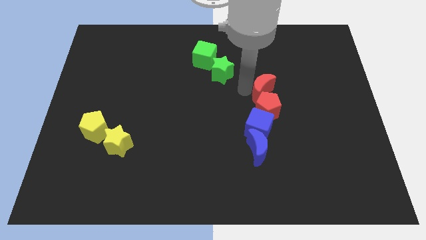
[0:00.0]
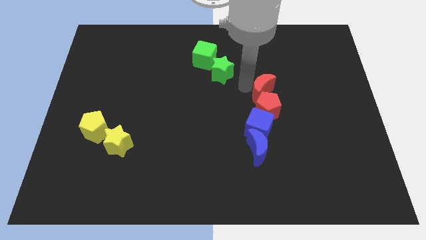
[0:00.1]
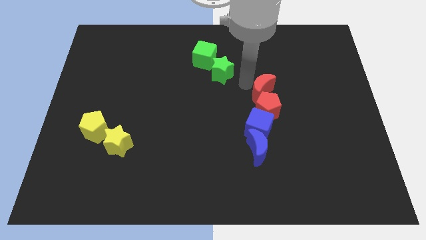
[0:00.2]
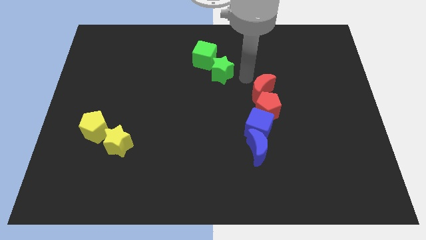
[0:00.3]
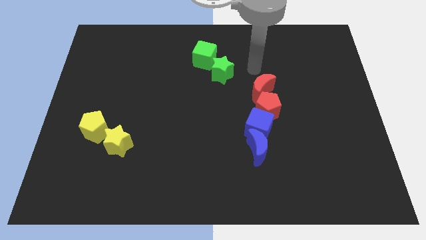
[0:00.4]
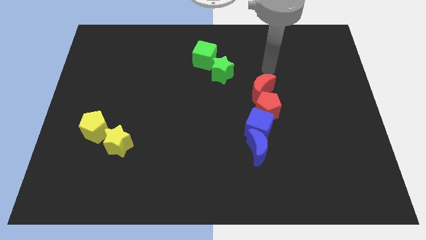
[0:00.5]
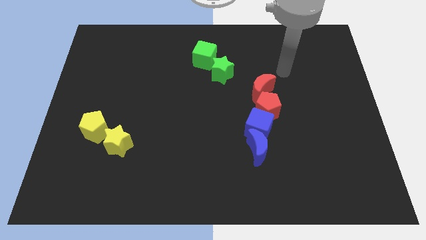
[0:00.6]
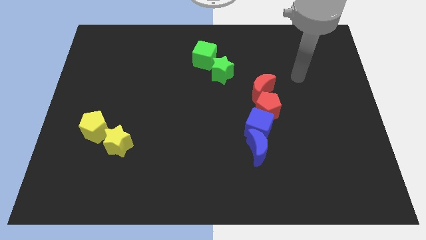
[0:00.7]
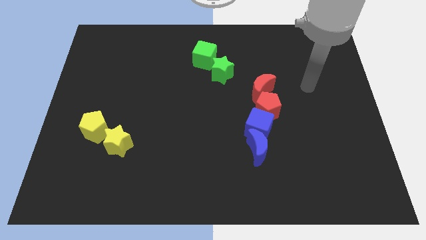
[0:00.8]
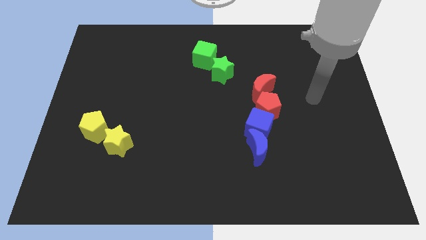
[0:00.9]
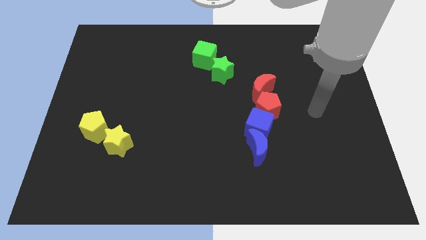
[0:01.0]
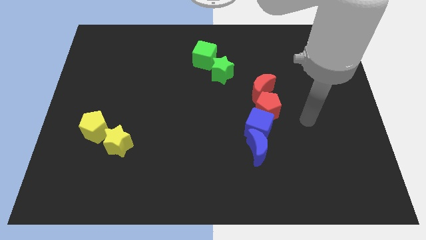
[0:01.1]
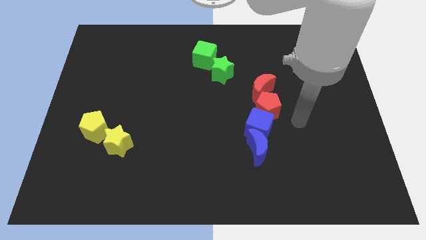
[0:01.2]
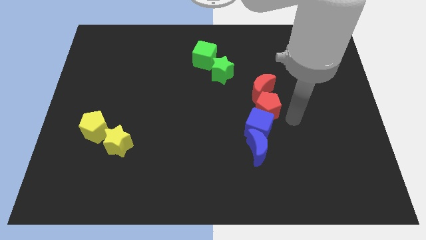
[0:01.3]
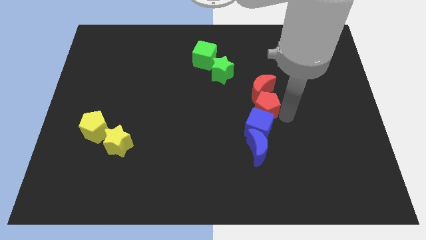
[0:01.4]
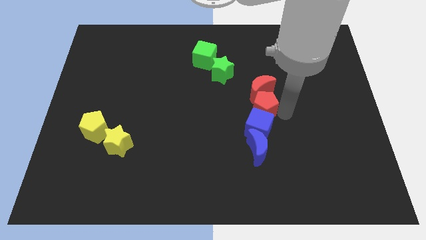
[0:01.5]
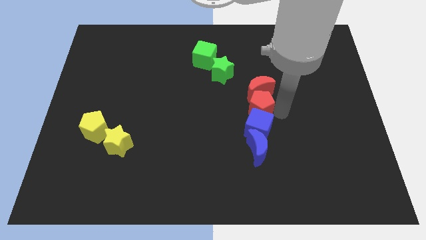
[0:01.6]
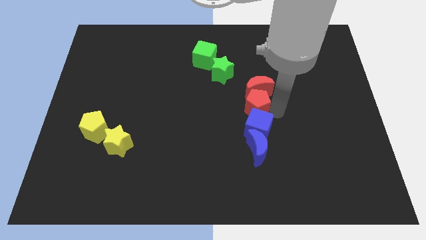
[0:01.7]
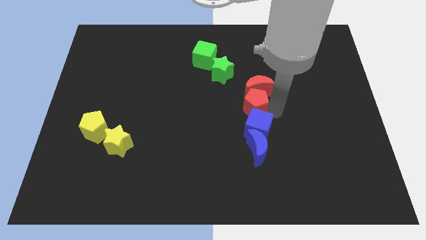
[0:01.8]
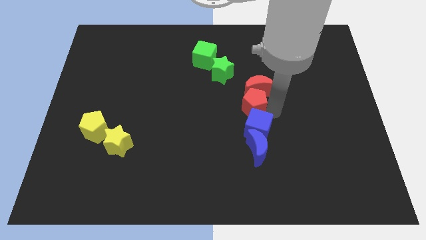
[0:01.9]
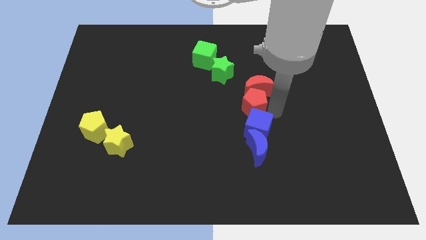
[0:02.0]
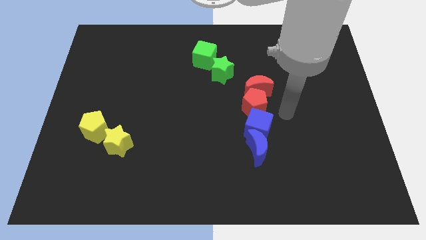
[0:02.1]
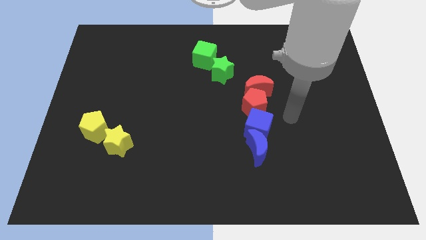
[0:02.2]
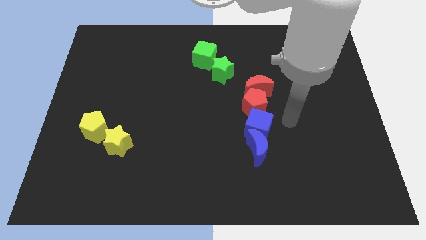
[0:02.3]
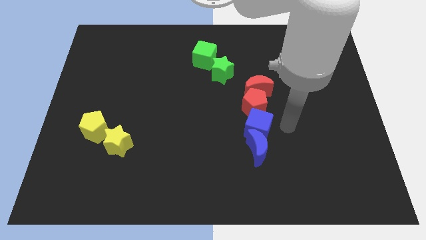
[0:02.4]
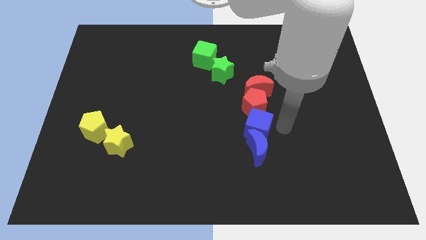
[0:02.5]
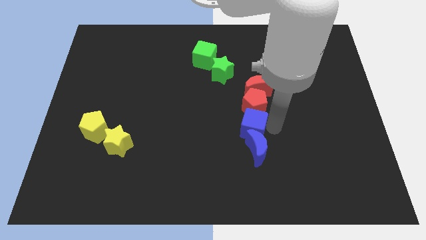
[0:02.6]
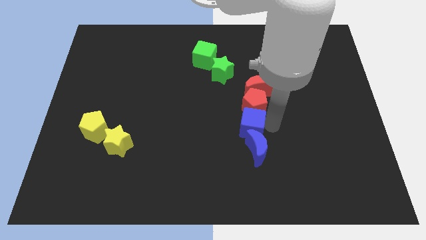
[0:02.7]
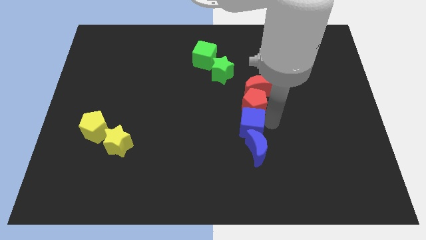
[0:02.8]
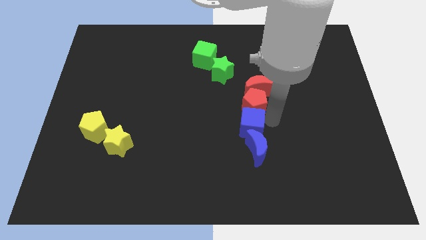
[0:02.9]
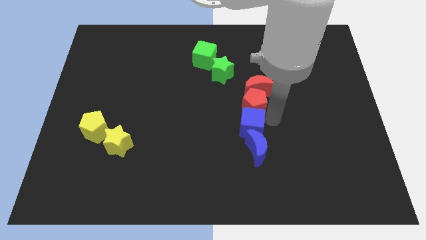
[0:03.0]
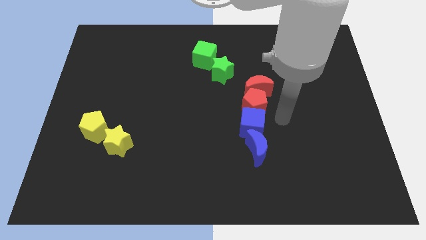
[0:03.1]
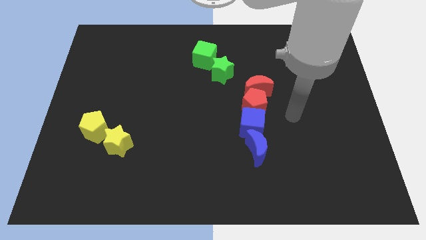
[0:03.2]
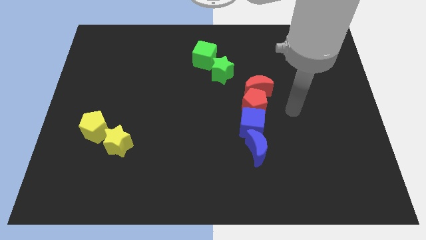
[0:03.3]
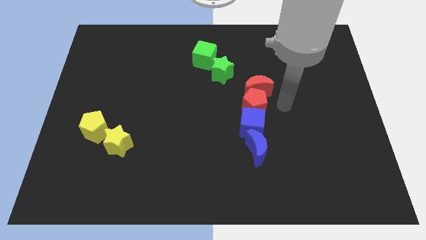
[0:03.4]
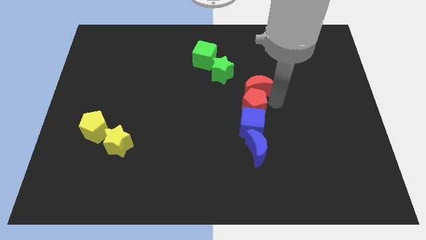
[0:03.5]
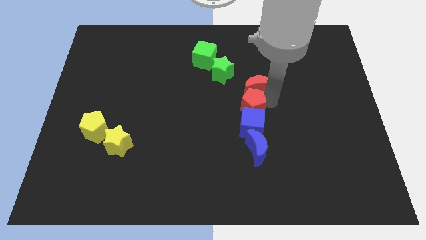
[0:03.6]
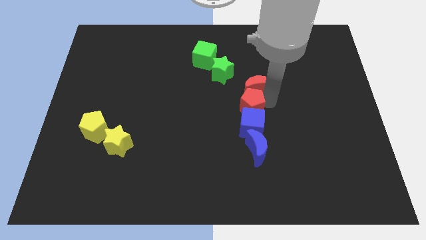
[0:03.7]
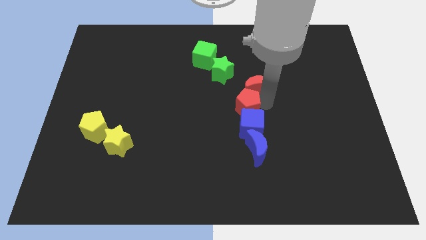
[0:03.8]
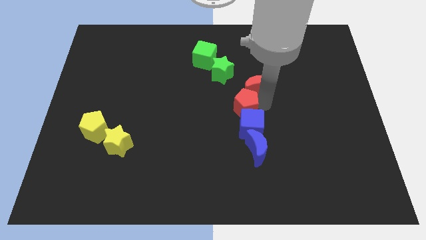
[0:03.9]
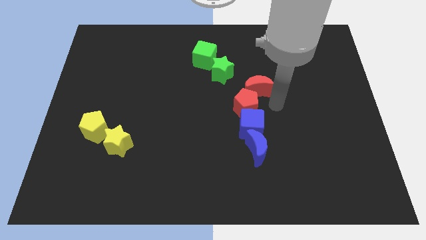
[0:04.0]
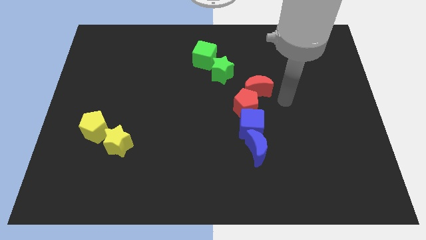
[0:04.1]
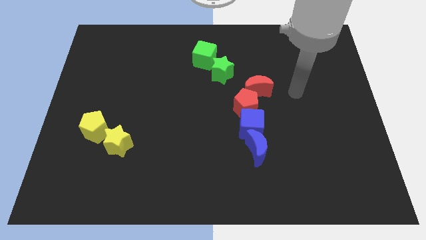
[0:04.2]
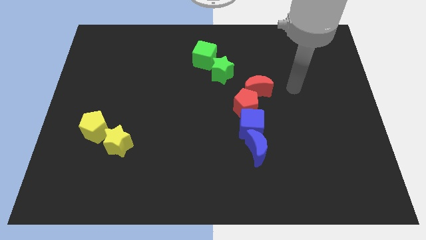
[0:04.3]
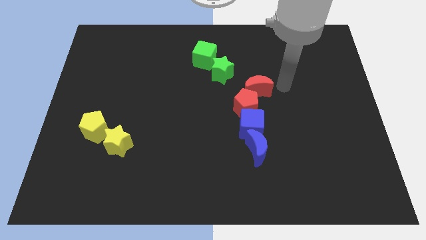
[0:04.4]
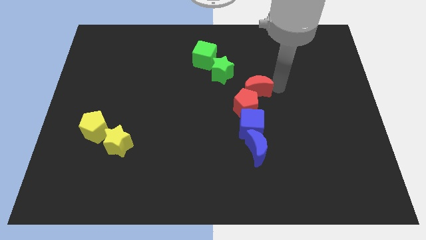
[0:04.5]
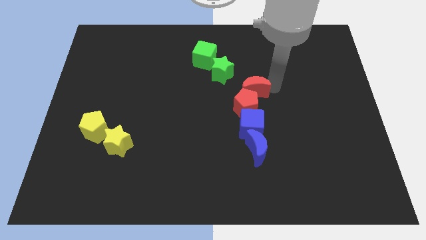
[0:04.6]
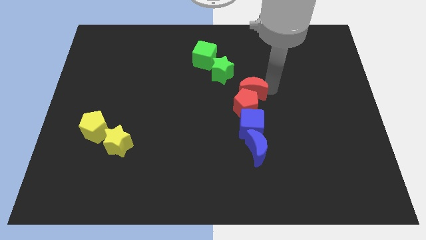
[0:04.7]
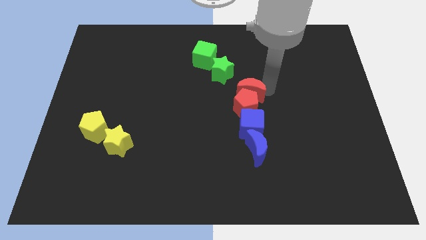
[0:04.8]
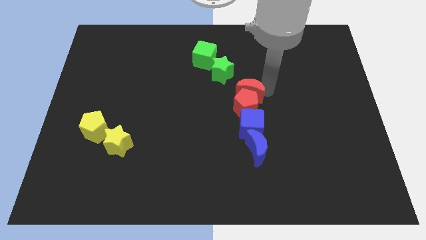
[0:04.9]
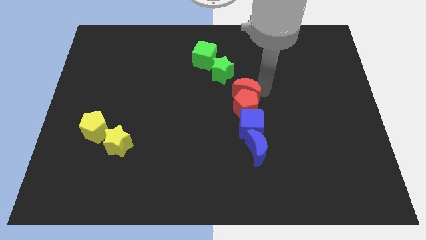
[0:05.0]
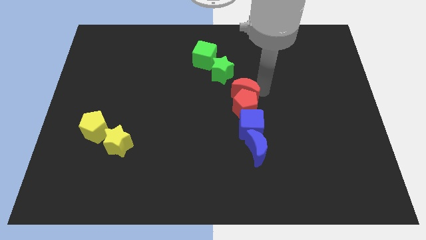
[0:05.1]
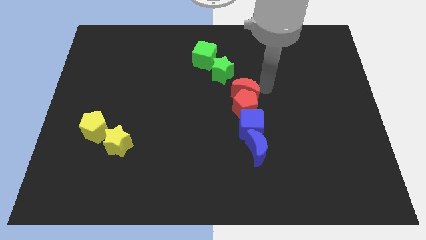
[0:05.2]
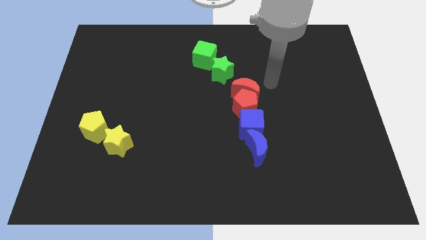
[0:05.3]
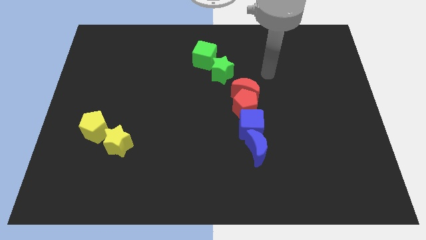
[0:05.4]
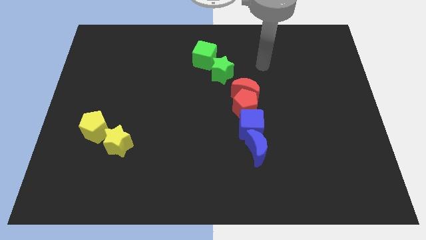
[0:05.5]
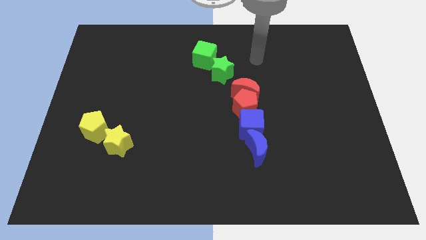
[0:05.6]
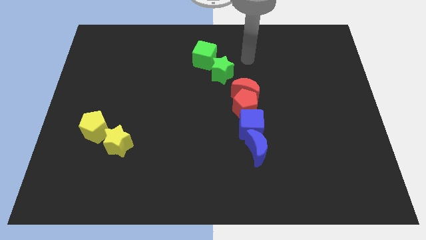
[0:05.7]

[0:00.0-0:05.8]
adjust the red and blue blocks to form a line

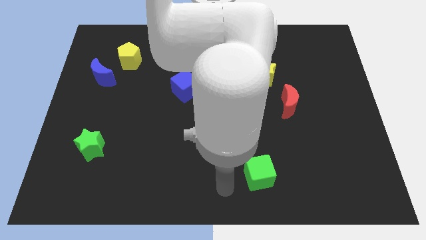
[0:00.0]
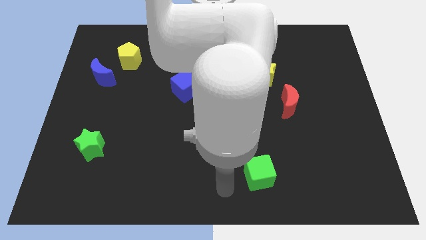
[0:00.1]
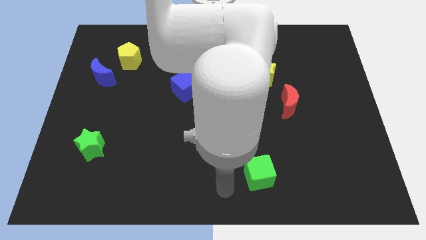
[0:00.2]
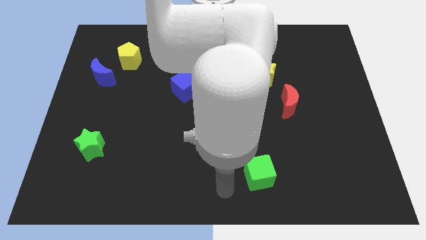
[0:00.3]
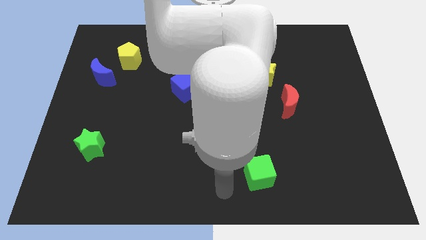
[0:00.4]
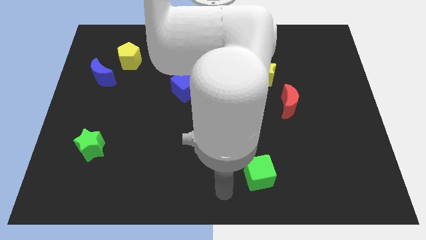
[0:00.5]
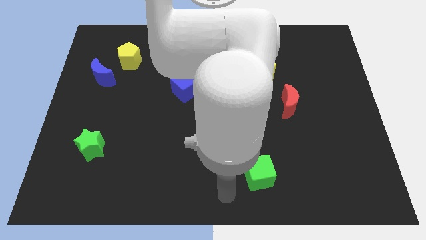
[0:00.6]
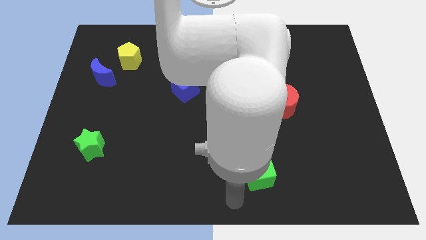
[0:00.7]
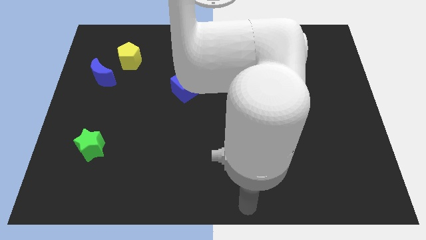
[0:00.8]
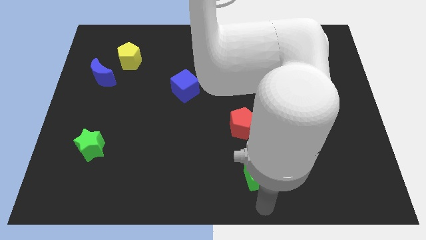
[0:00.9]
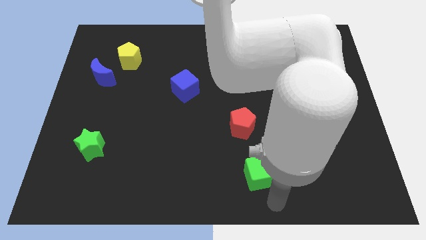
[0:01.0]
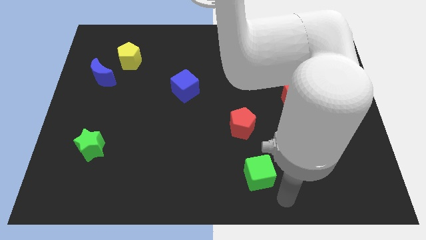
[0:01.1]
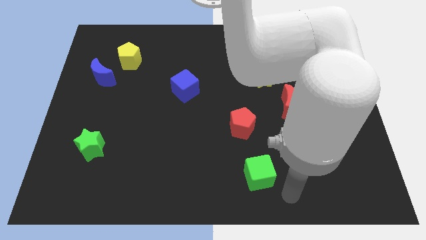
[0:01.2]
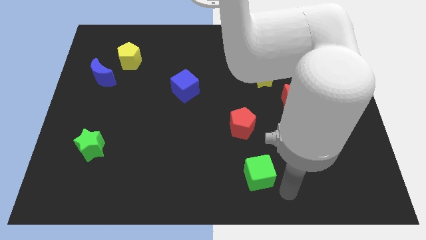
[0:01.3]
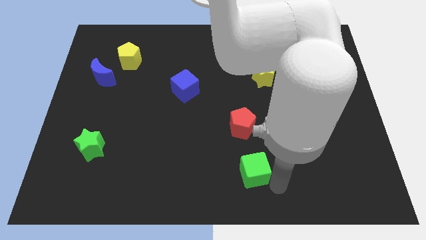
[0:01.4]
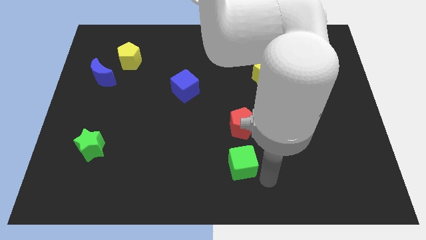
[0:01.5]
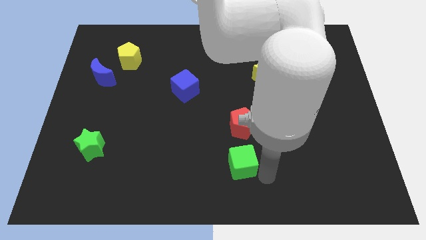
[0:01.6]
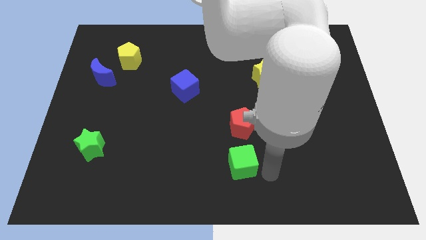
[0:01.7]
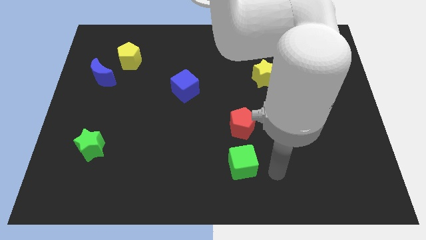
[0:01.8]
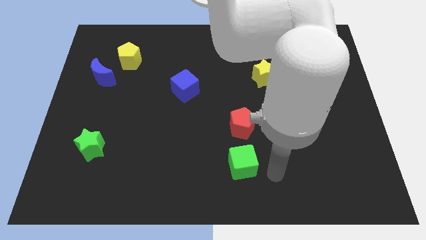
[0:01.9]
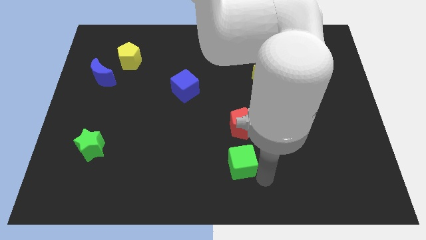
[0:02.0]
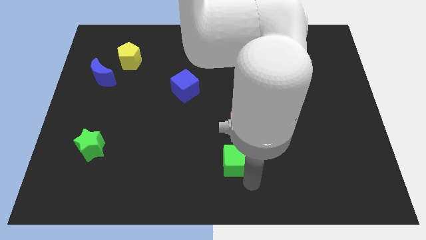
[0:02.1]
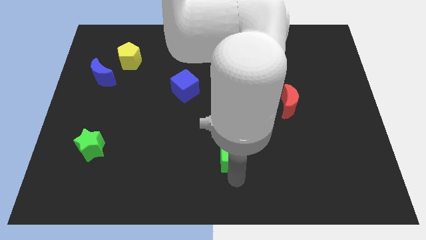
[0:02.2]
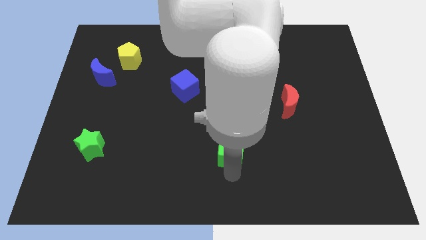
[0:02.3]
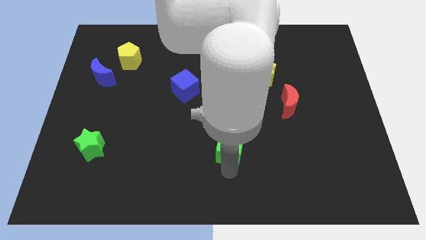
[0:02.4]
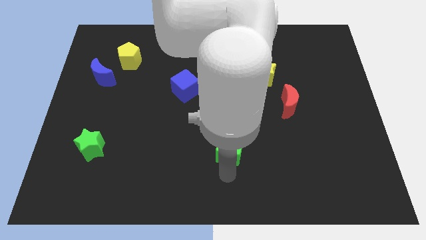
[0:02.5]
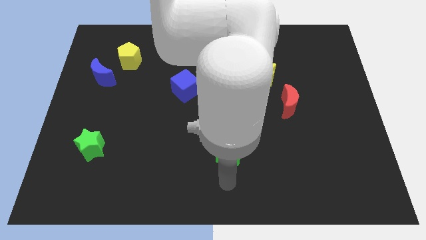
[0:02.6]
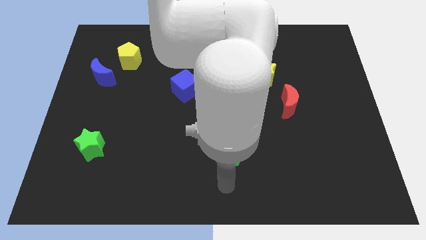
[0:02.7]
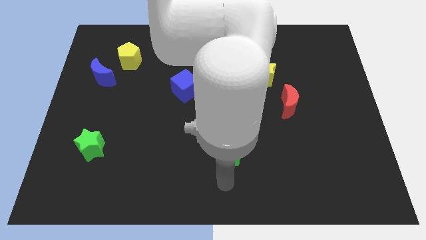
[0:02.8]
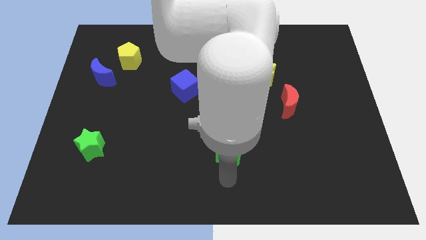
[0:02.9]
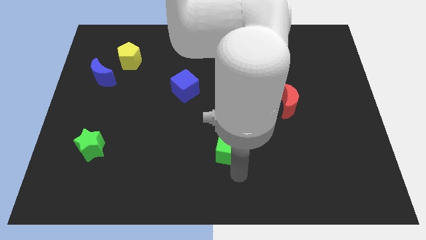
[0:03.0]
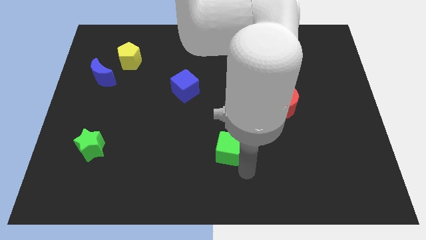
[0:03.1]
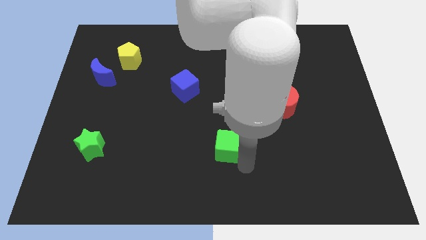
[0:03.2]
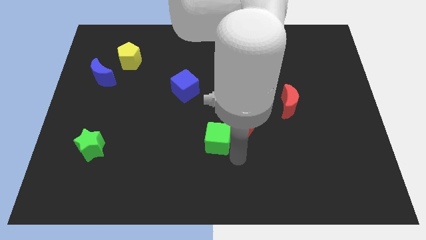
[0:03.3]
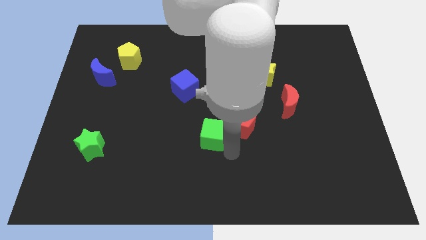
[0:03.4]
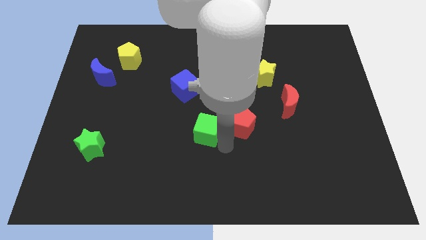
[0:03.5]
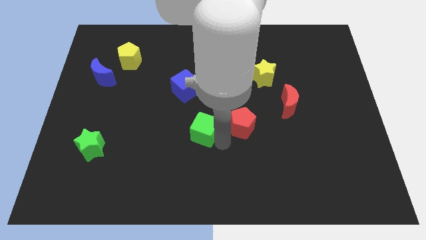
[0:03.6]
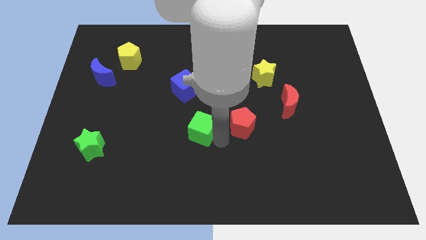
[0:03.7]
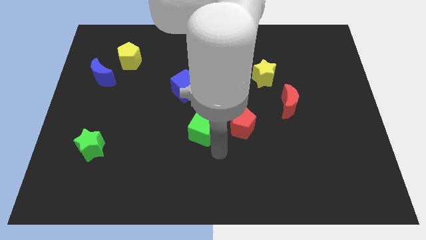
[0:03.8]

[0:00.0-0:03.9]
place the green cube left to the red pentagon
